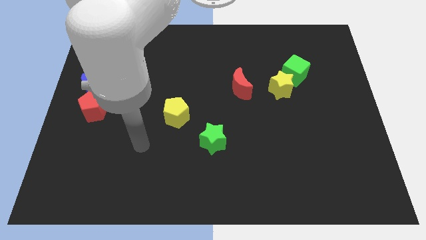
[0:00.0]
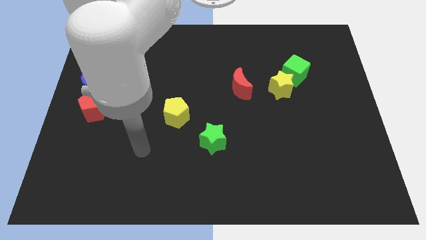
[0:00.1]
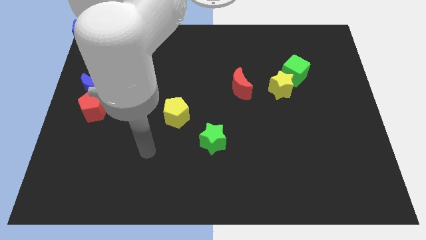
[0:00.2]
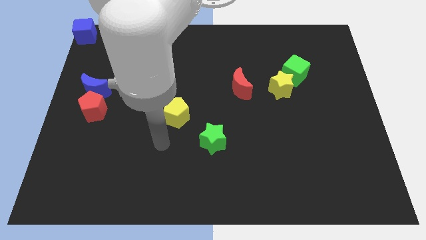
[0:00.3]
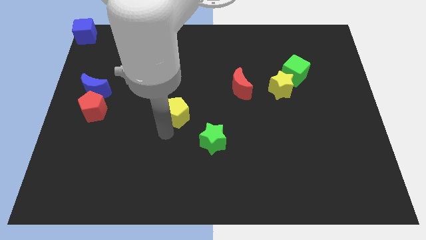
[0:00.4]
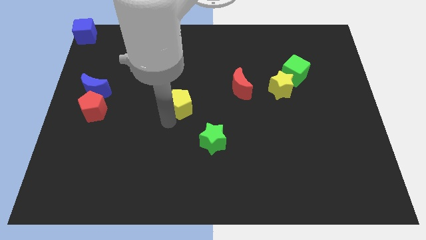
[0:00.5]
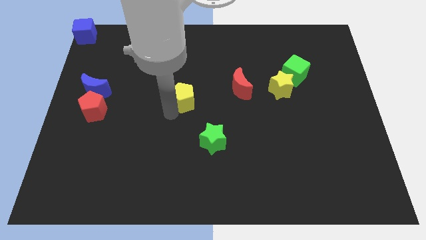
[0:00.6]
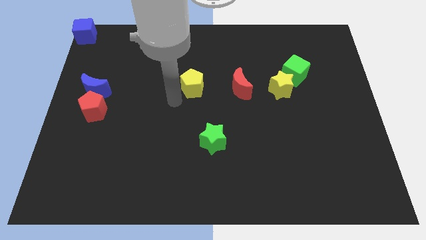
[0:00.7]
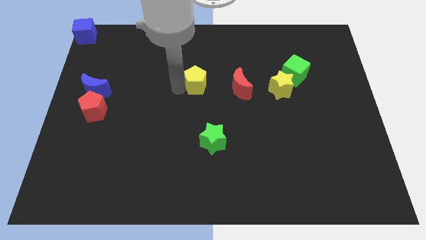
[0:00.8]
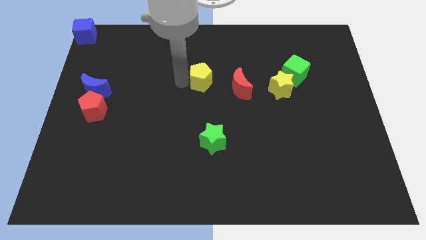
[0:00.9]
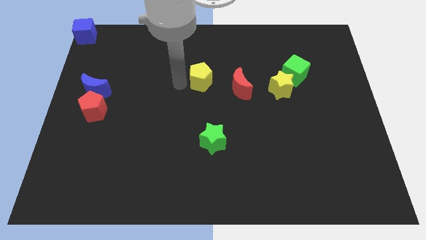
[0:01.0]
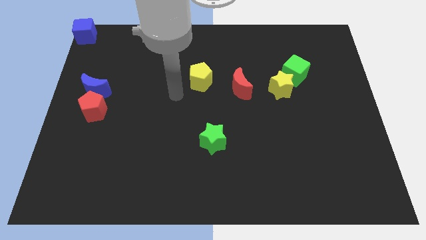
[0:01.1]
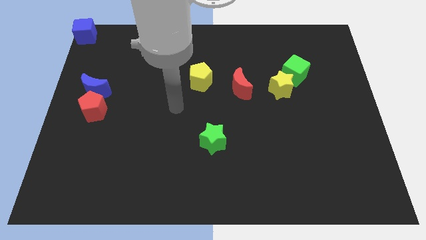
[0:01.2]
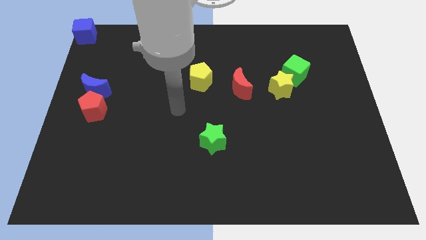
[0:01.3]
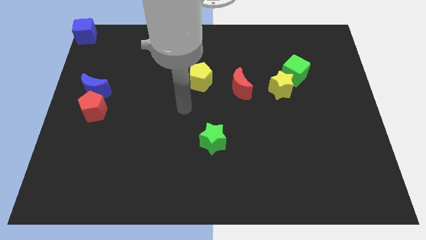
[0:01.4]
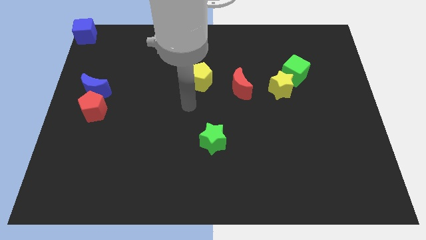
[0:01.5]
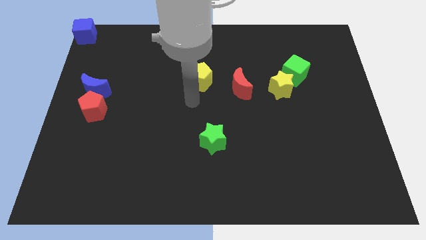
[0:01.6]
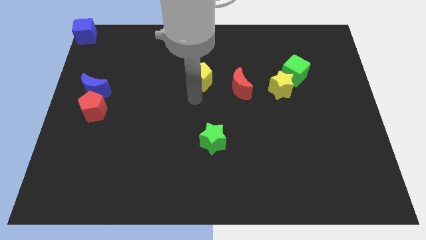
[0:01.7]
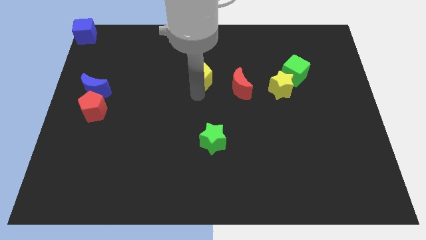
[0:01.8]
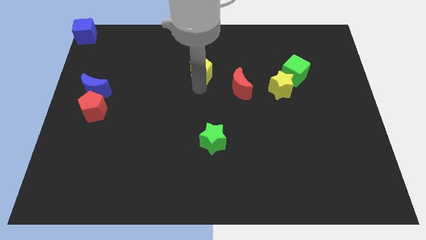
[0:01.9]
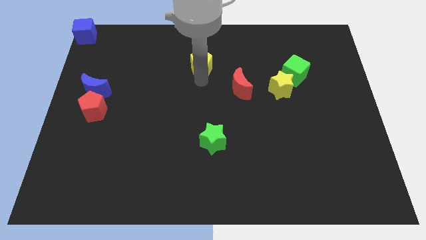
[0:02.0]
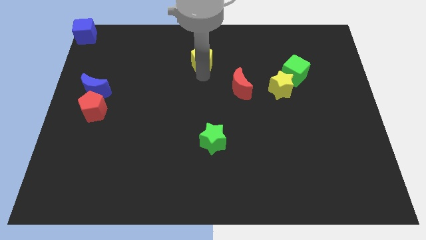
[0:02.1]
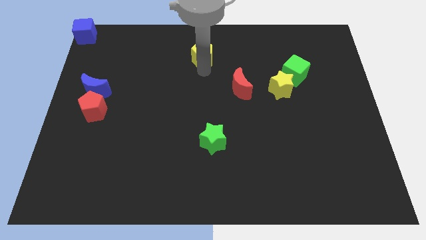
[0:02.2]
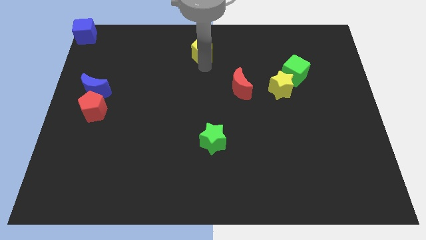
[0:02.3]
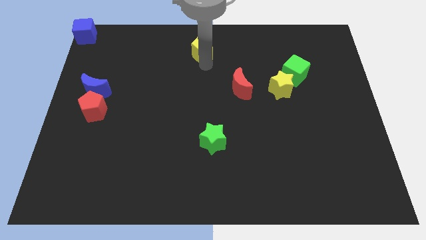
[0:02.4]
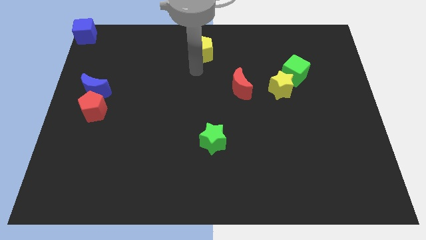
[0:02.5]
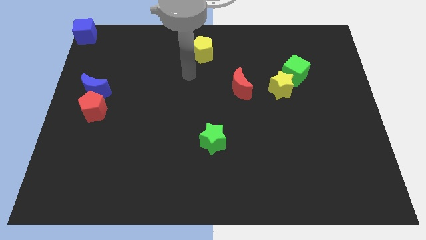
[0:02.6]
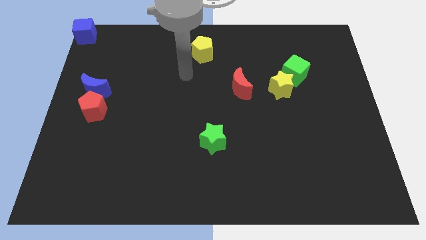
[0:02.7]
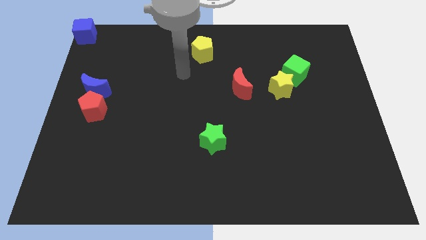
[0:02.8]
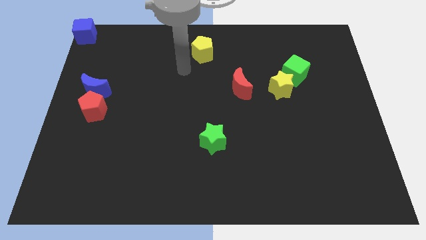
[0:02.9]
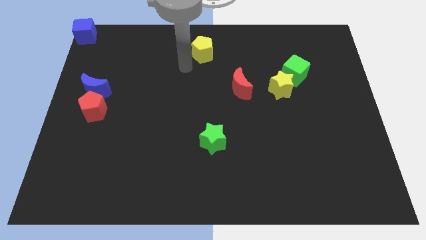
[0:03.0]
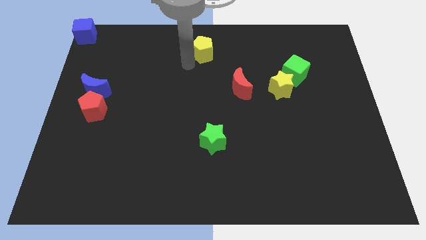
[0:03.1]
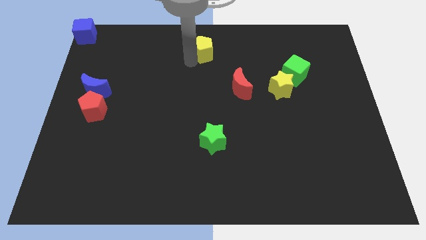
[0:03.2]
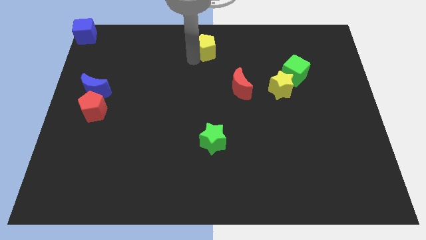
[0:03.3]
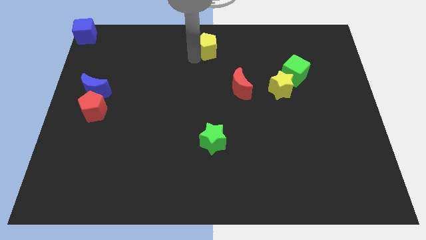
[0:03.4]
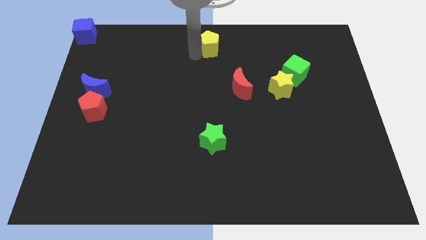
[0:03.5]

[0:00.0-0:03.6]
move the yellow pentagon vertically above the green star

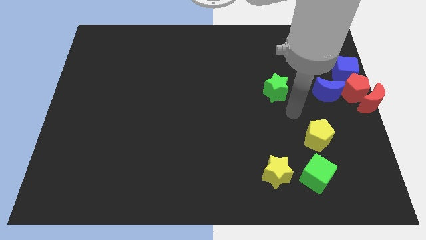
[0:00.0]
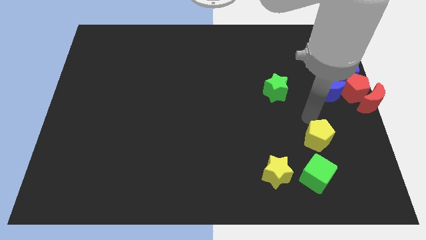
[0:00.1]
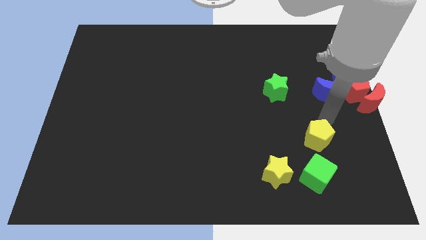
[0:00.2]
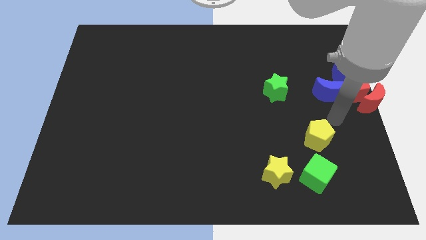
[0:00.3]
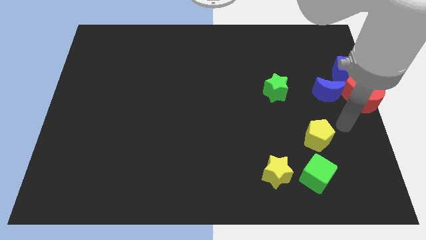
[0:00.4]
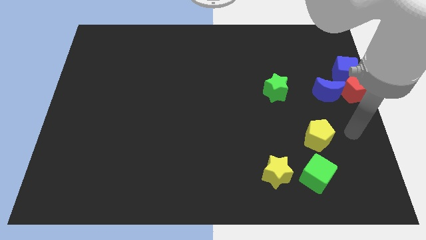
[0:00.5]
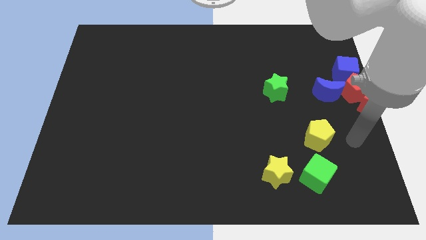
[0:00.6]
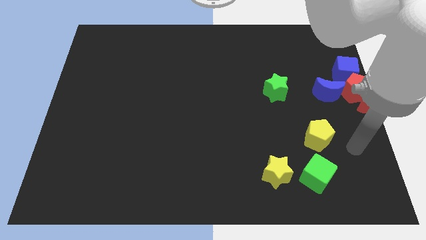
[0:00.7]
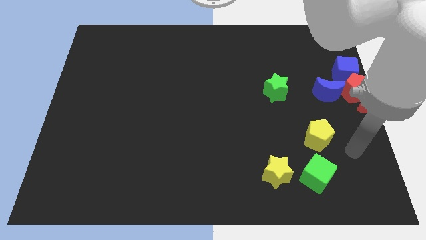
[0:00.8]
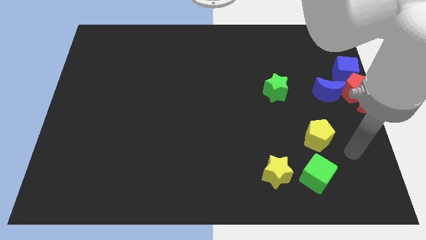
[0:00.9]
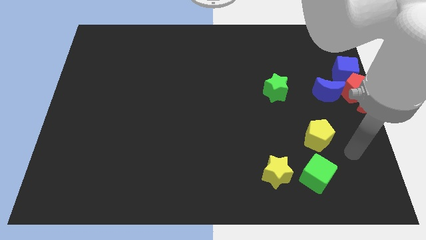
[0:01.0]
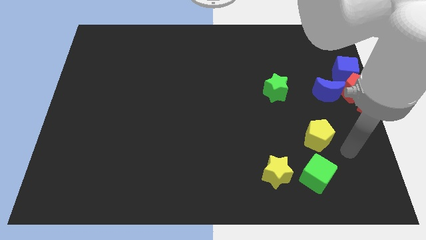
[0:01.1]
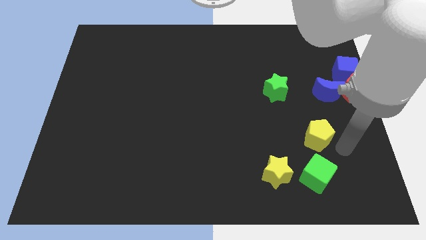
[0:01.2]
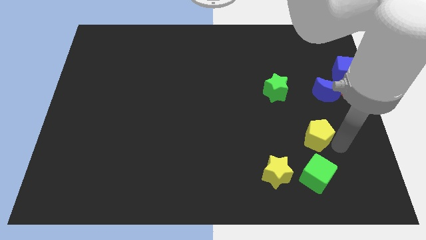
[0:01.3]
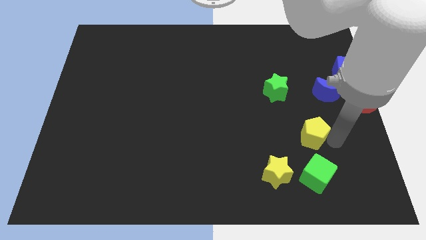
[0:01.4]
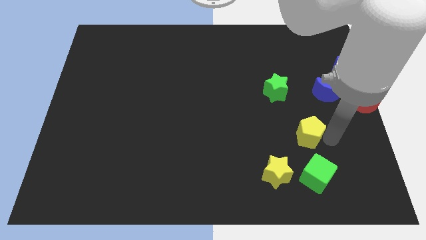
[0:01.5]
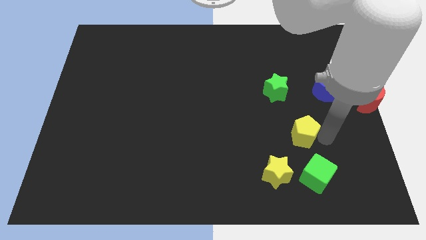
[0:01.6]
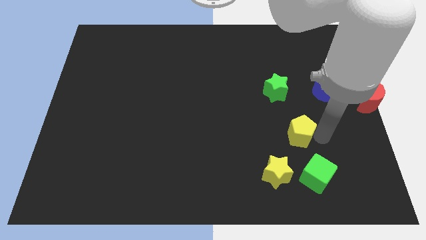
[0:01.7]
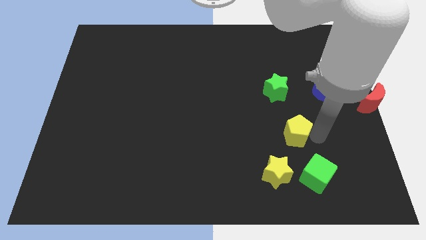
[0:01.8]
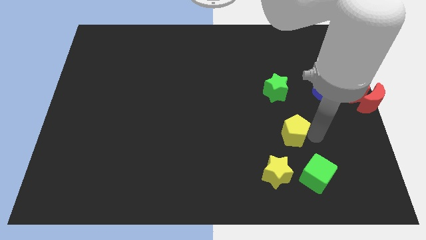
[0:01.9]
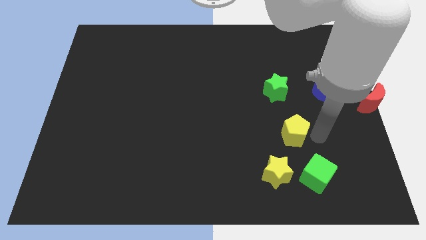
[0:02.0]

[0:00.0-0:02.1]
push yellow pentagon on top of yellow star and green cube to form a triangle

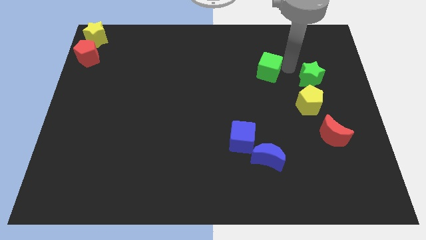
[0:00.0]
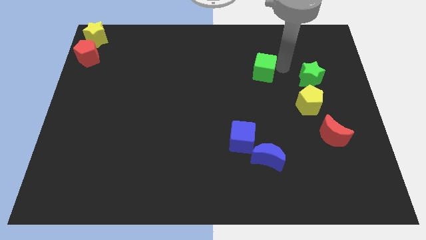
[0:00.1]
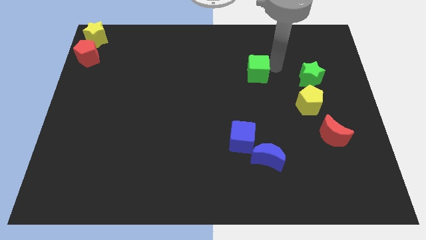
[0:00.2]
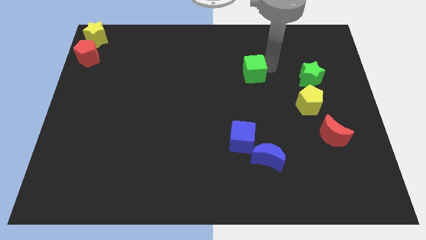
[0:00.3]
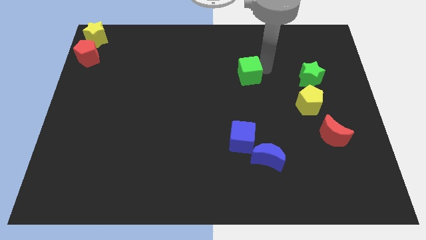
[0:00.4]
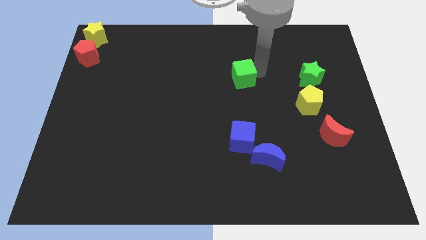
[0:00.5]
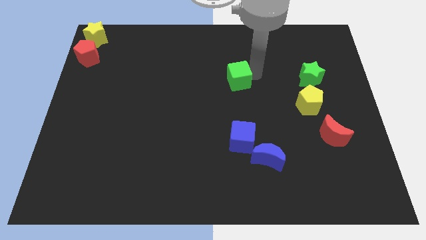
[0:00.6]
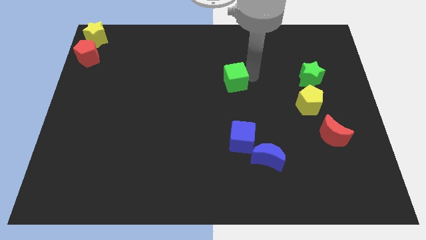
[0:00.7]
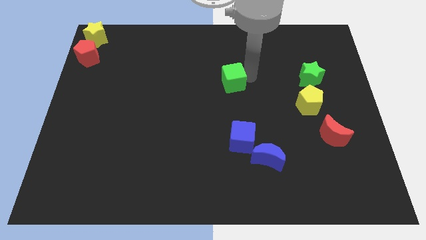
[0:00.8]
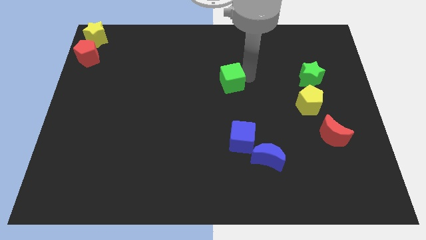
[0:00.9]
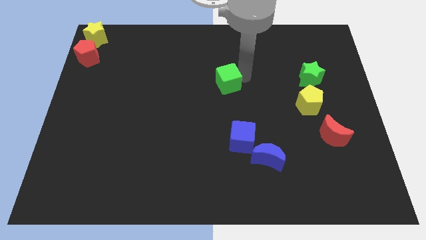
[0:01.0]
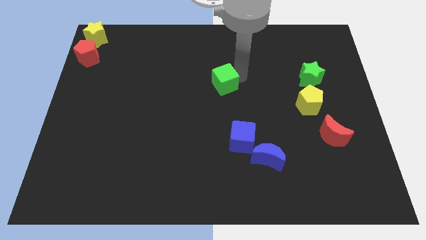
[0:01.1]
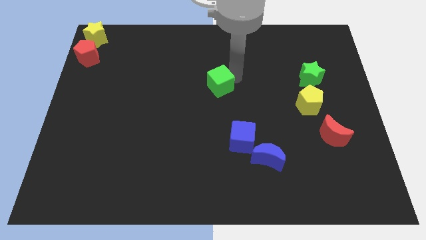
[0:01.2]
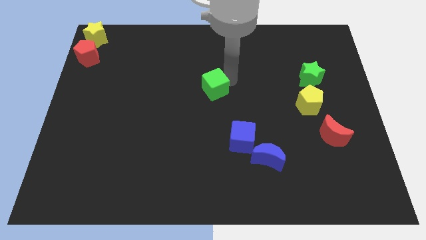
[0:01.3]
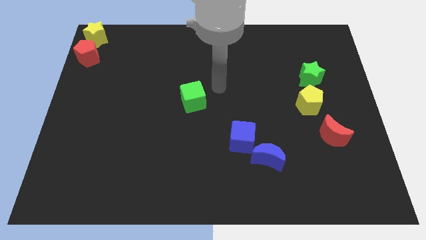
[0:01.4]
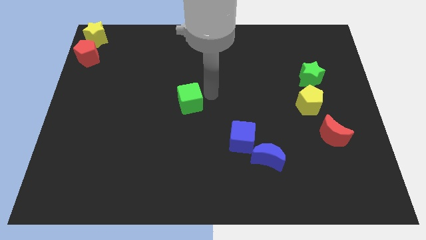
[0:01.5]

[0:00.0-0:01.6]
push the green cube to the top left of the blue cube

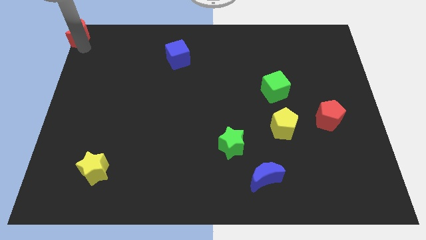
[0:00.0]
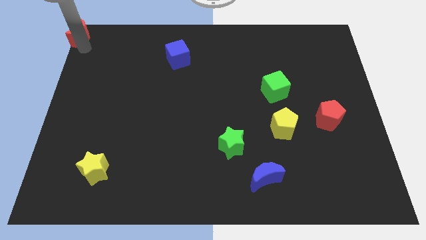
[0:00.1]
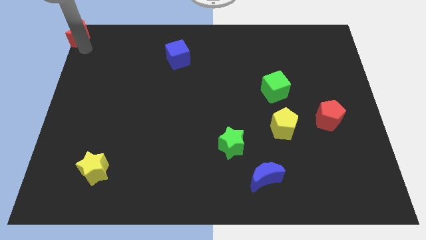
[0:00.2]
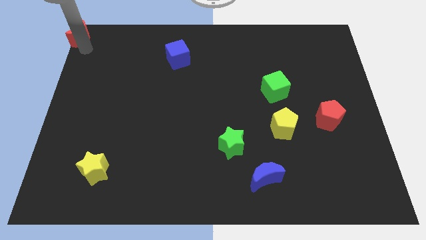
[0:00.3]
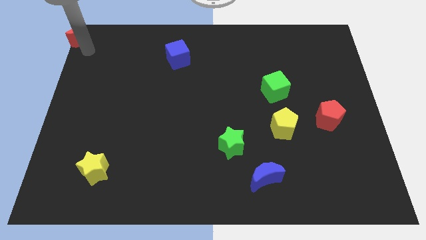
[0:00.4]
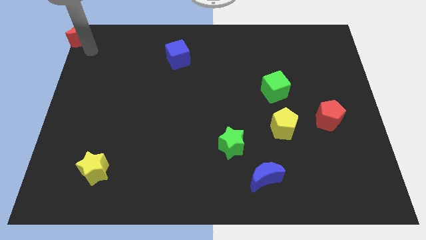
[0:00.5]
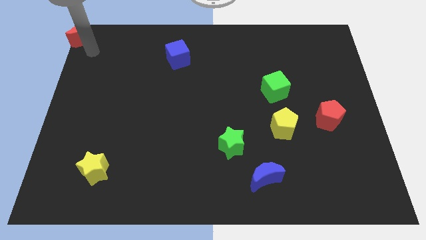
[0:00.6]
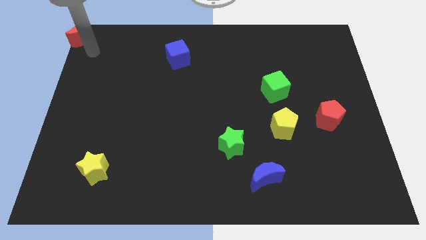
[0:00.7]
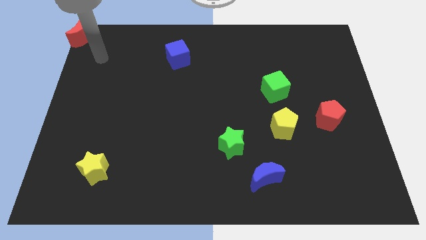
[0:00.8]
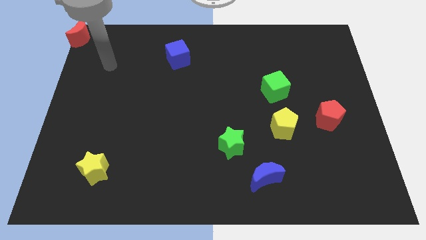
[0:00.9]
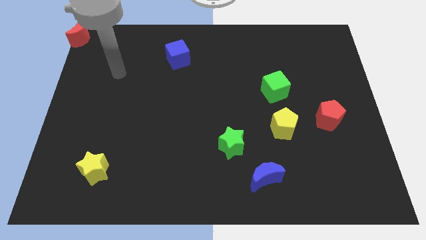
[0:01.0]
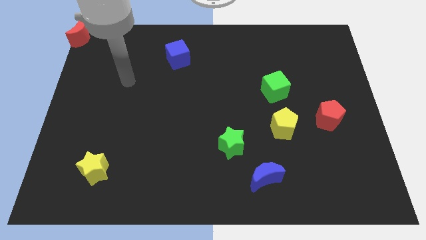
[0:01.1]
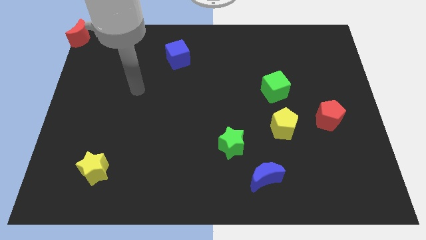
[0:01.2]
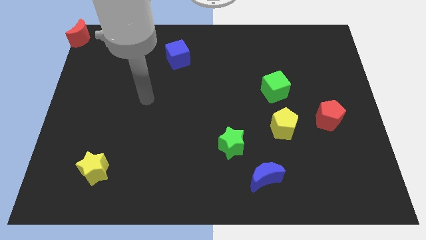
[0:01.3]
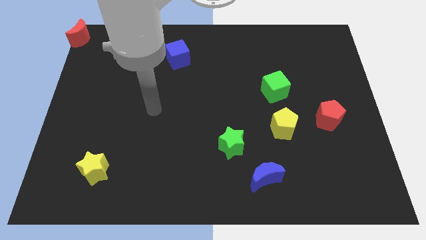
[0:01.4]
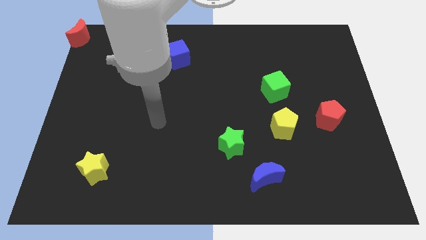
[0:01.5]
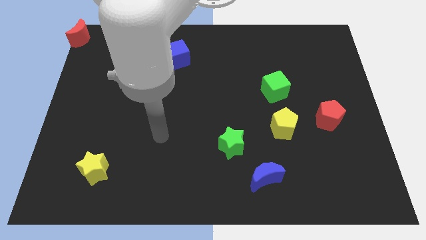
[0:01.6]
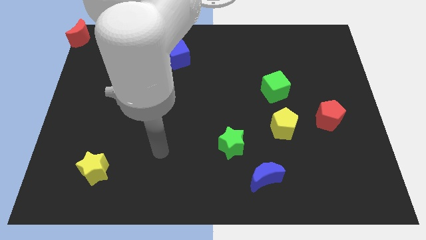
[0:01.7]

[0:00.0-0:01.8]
move your arm to the left side of the green star
